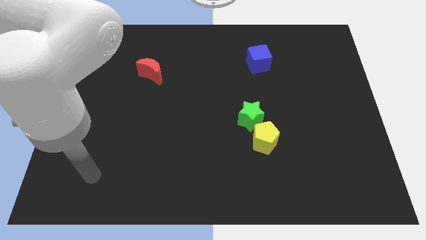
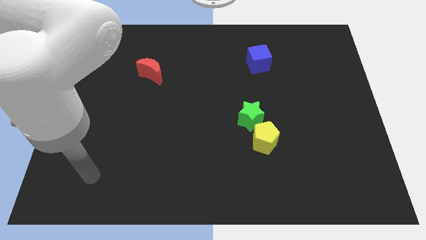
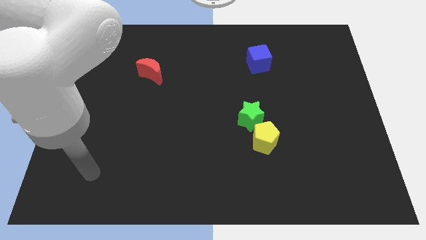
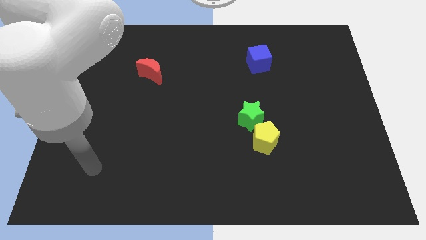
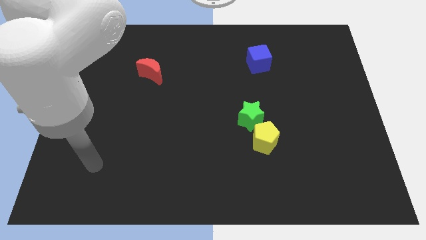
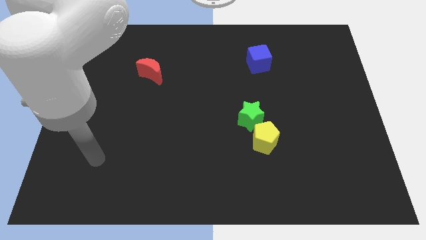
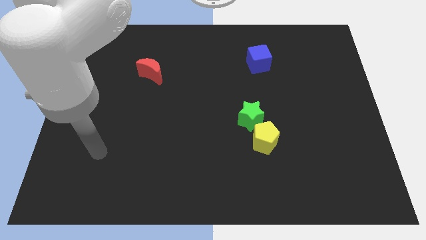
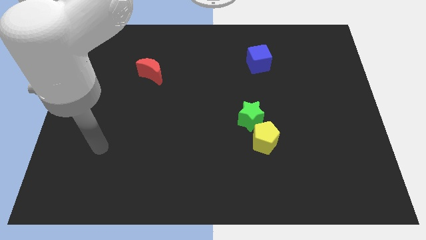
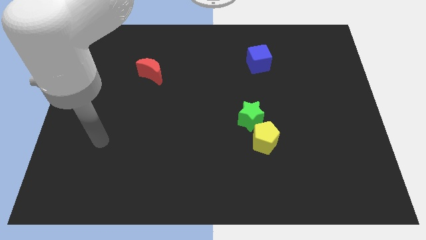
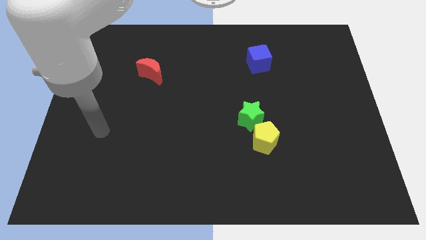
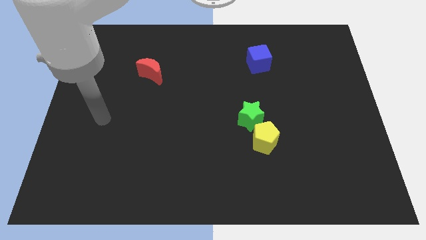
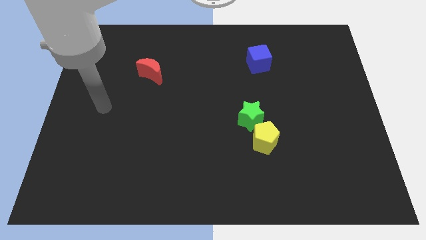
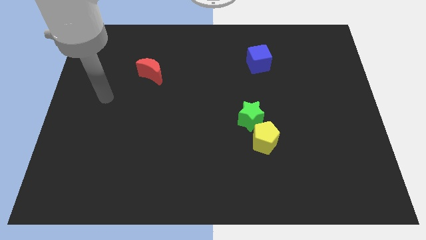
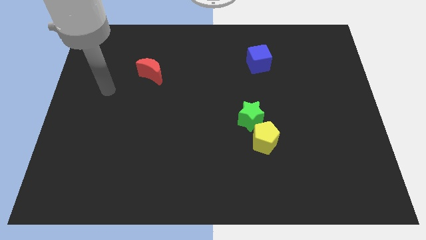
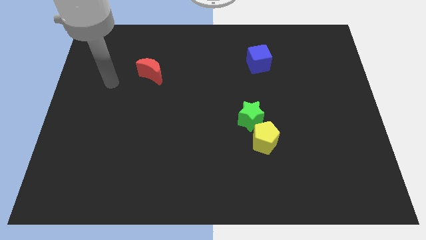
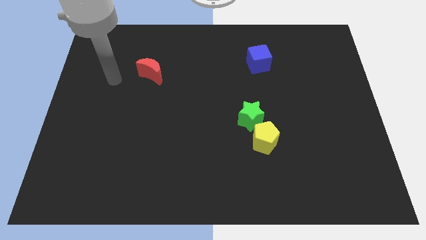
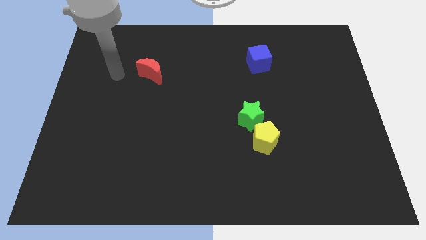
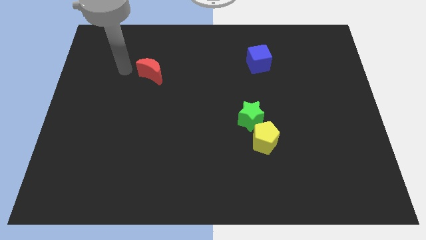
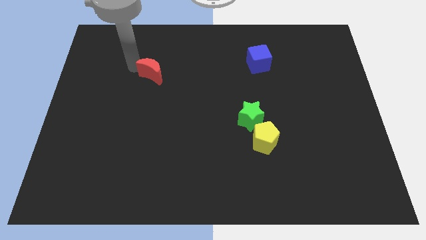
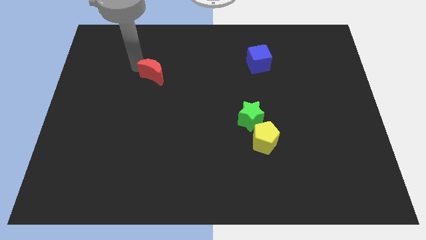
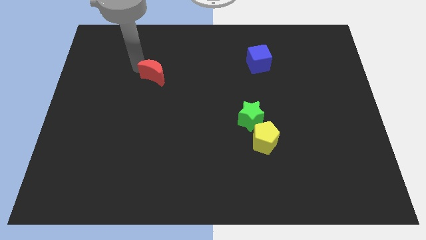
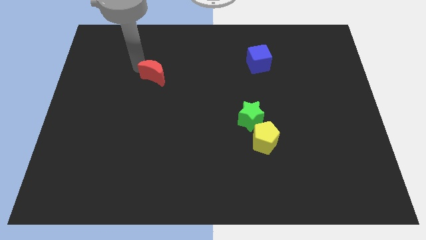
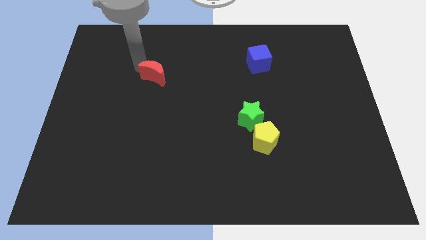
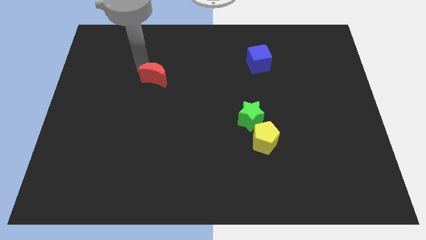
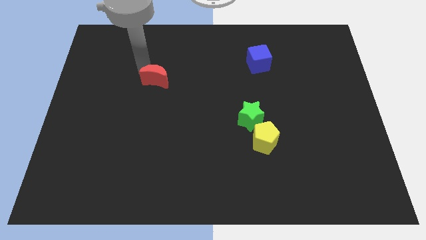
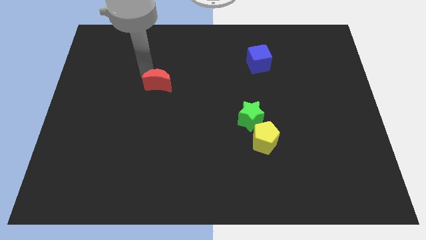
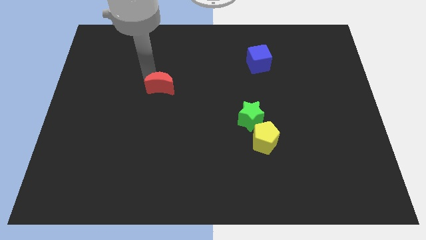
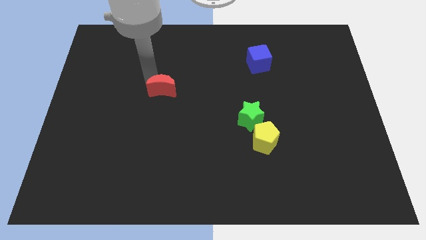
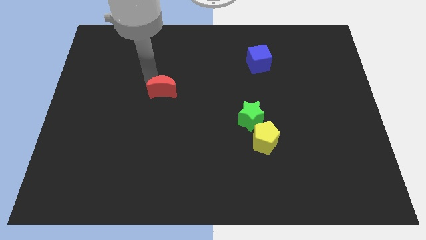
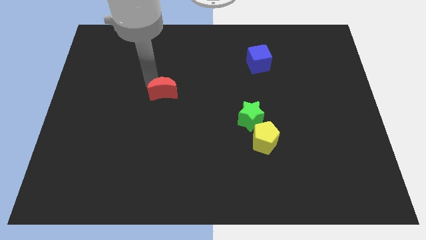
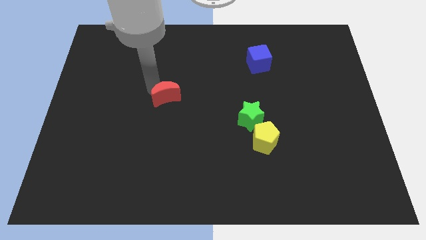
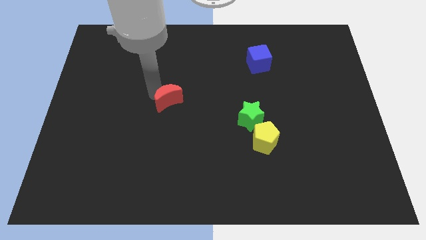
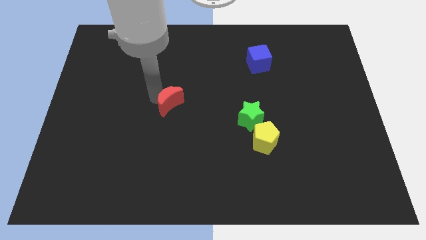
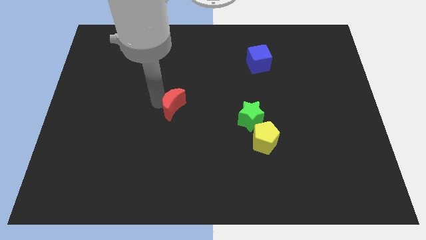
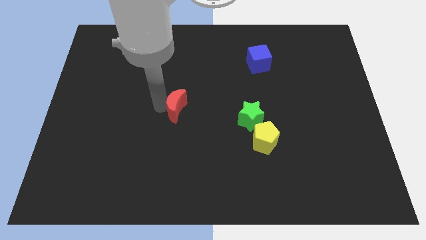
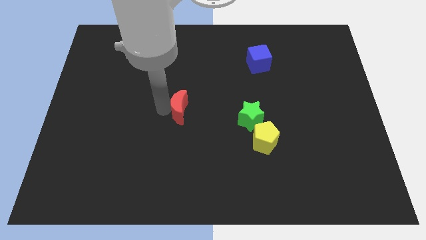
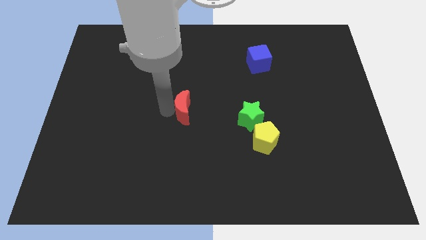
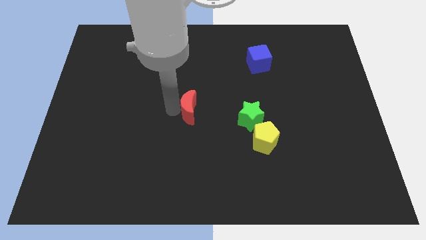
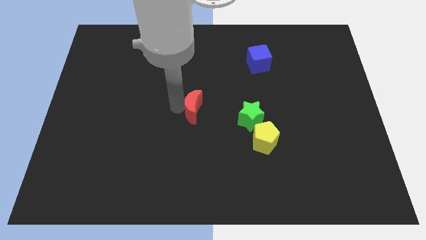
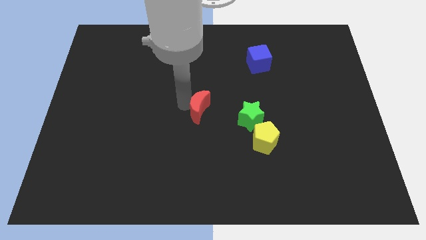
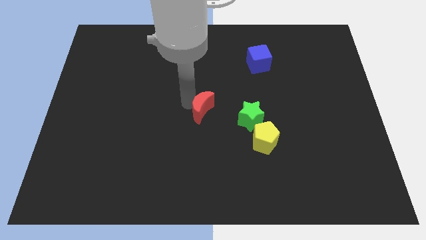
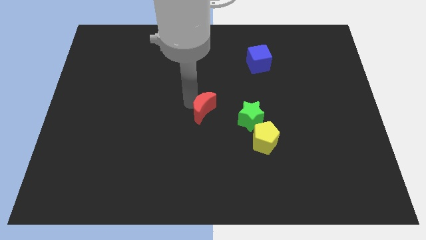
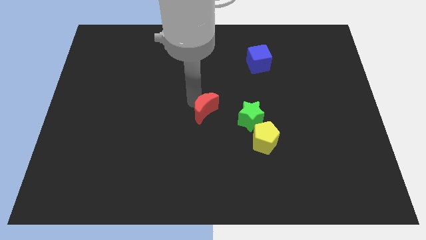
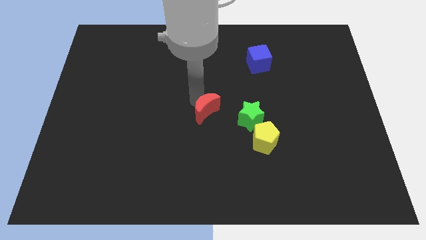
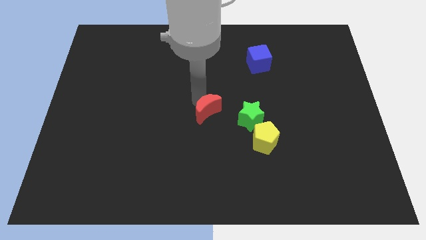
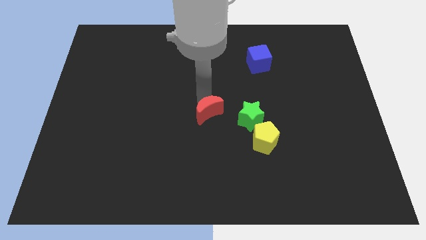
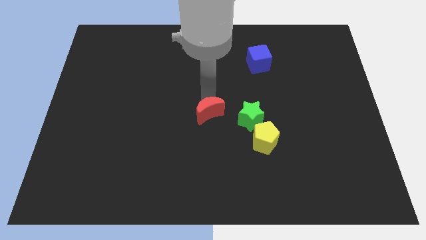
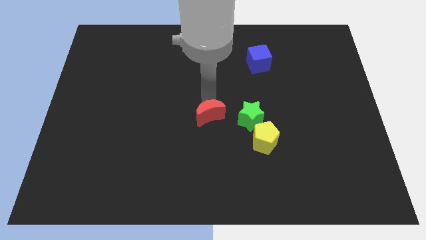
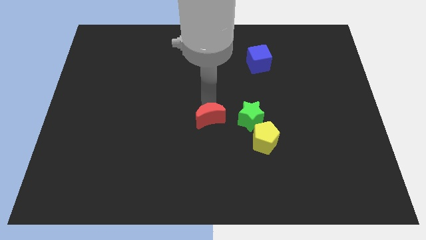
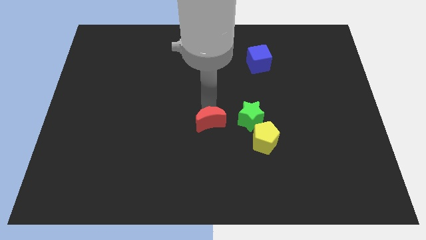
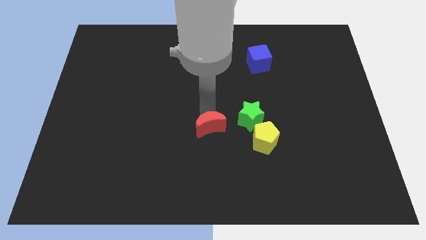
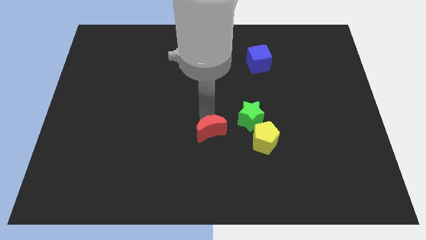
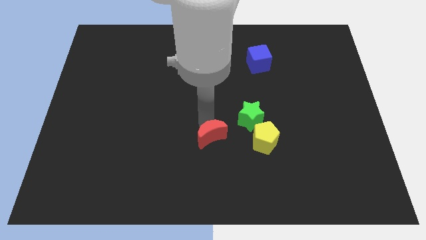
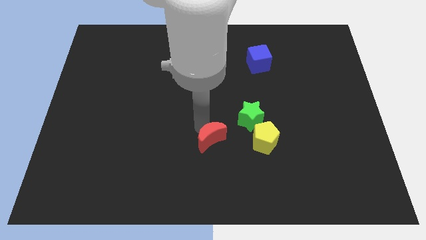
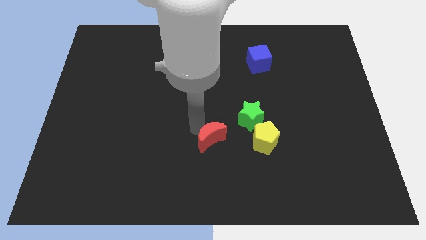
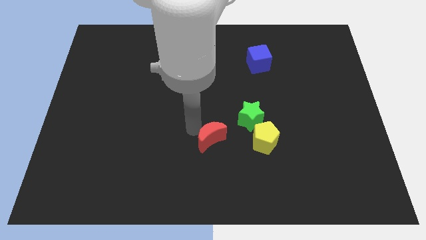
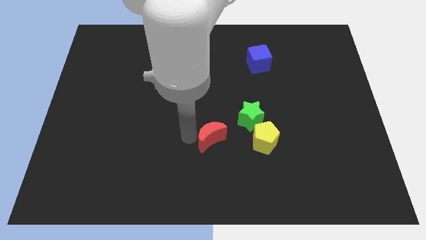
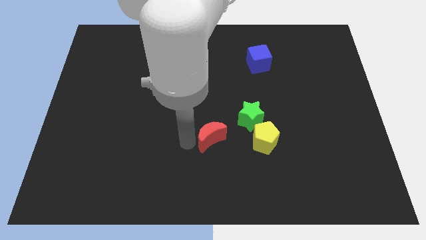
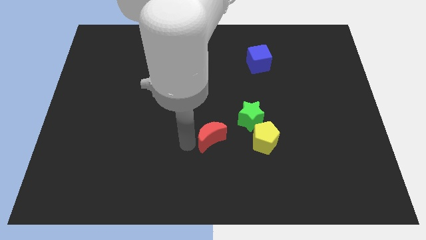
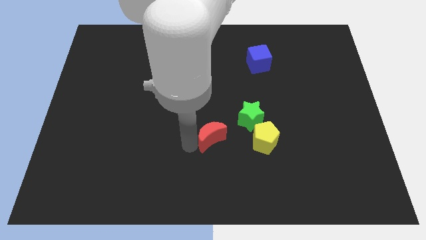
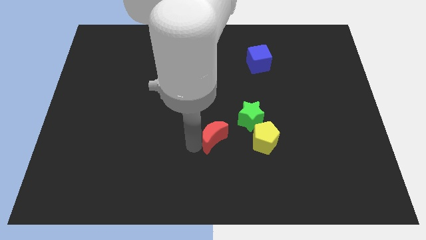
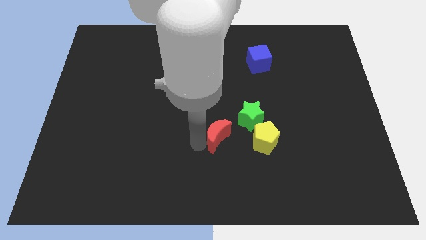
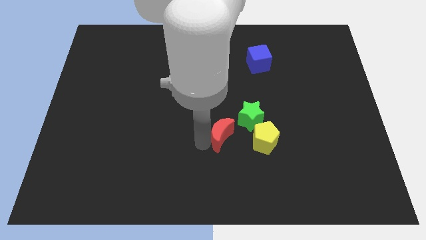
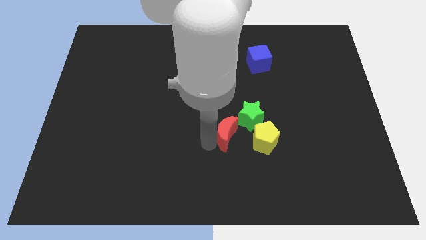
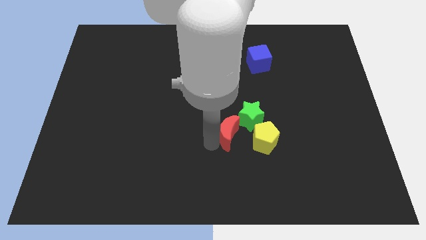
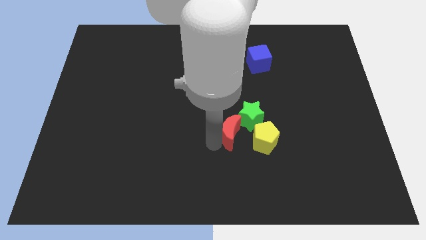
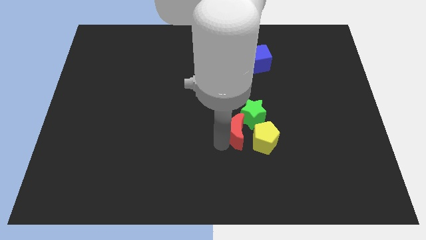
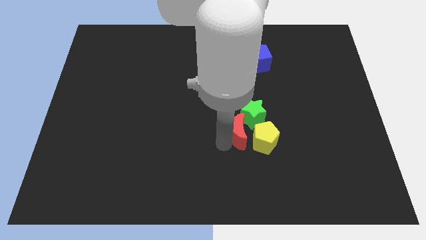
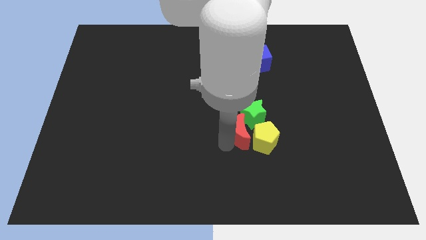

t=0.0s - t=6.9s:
put the red moon next to the yellow pentagon

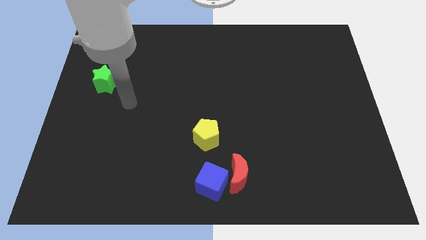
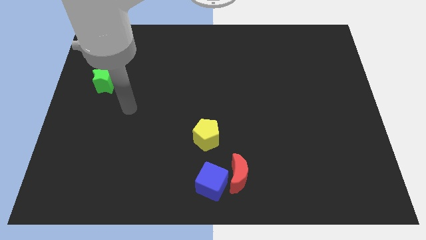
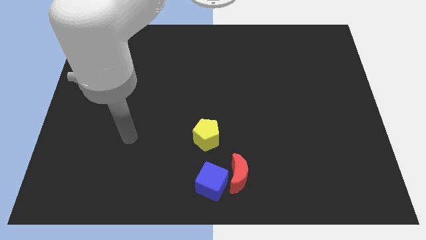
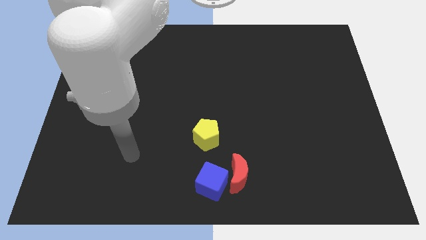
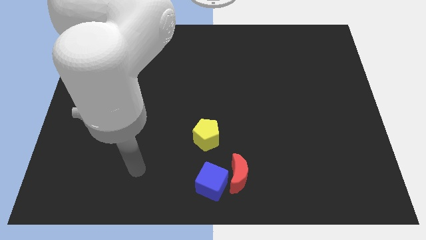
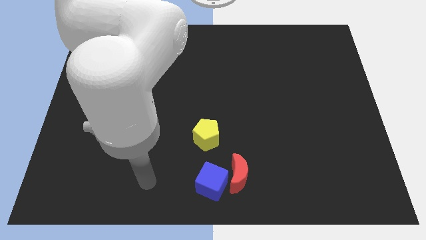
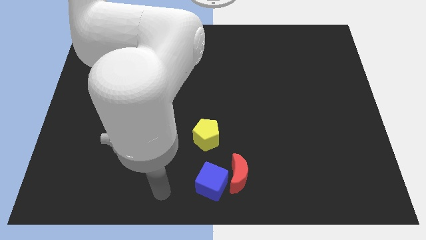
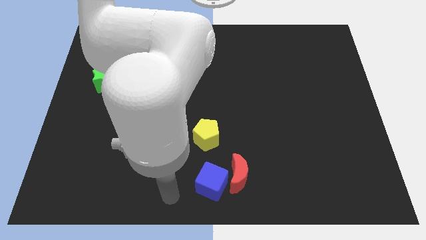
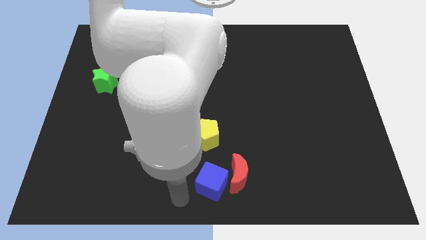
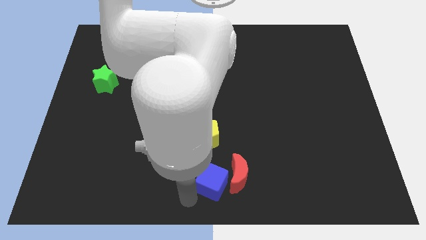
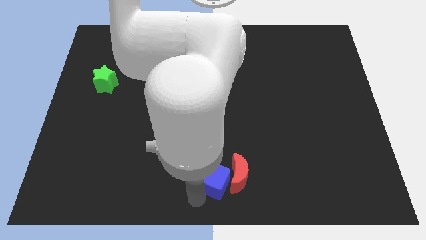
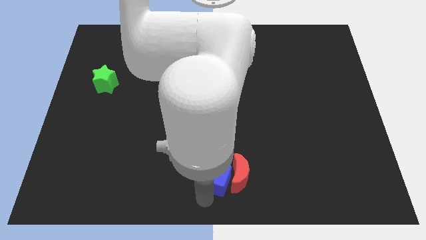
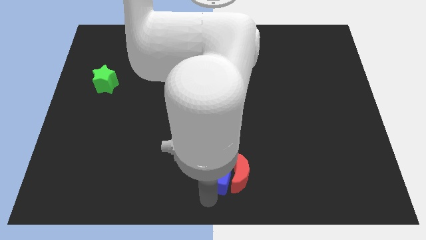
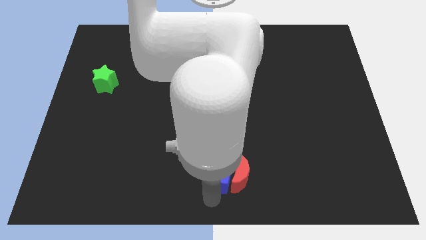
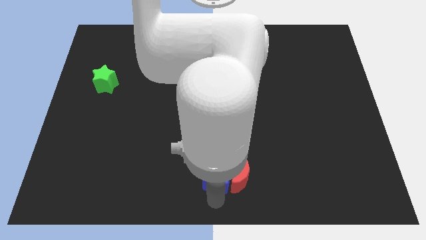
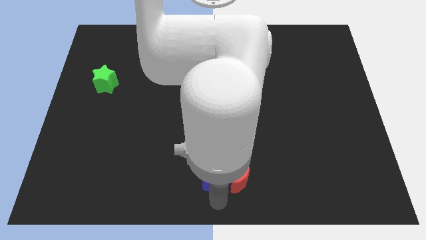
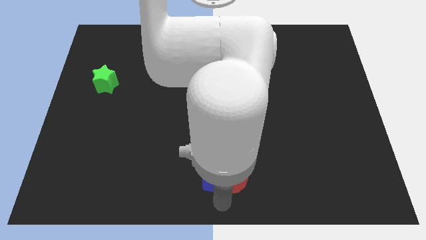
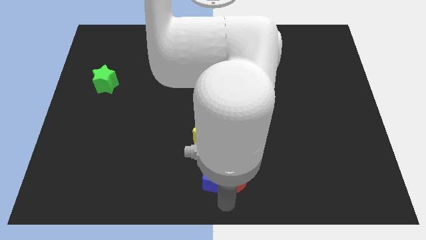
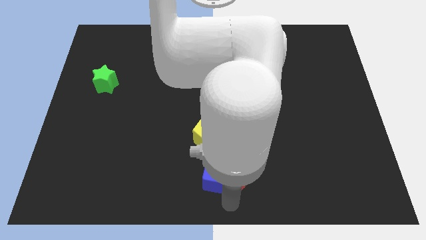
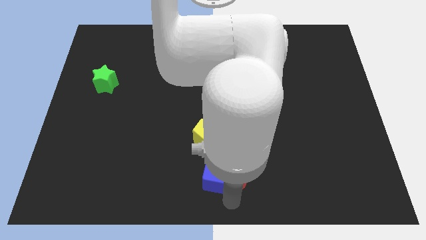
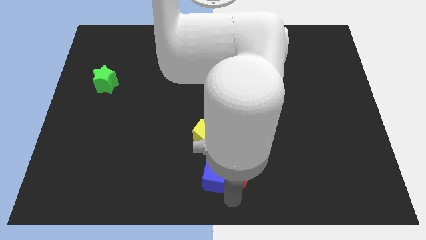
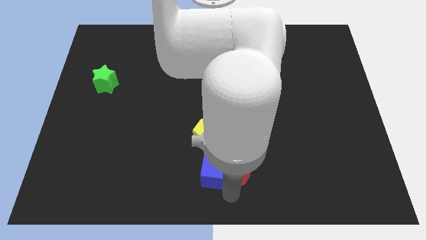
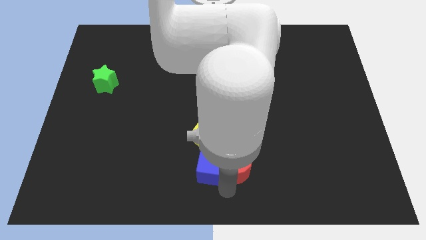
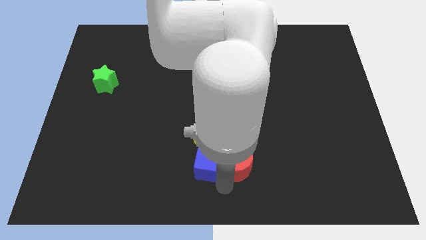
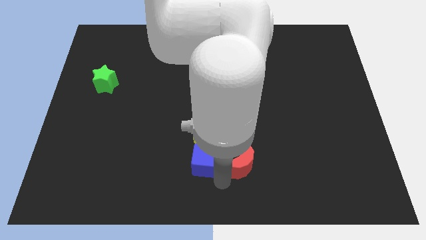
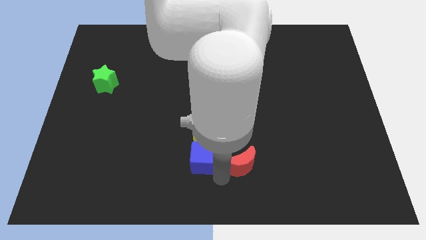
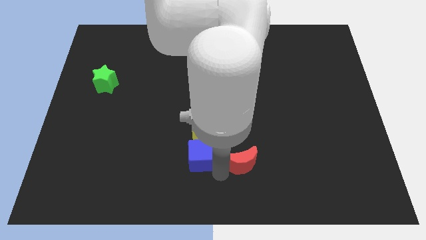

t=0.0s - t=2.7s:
slide the blue cube close to the yellow pentagon
